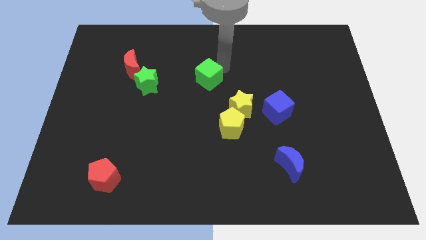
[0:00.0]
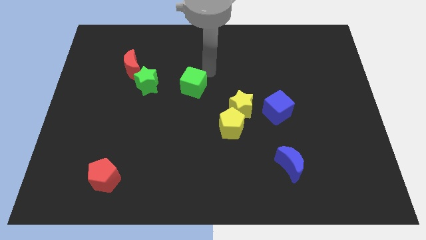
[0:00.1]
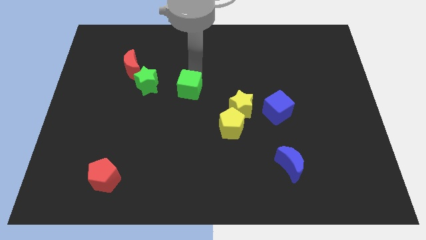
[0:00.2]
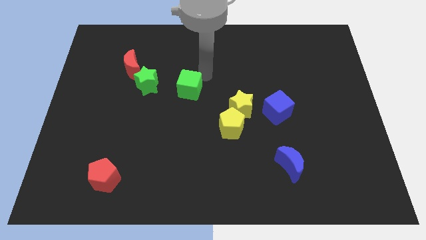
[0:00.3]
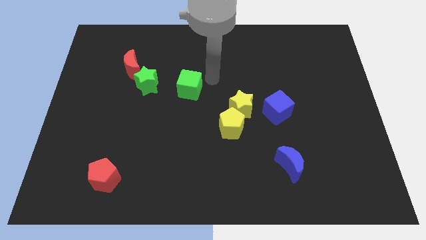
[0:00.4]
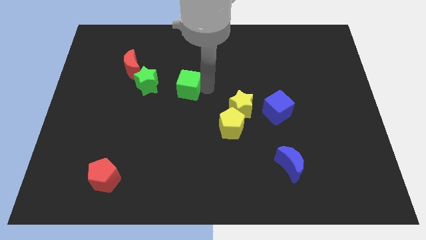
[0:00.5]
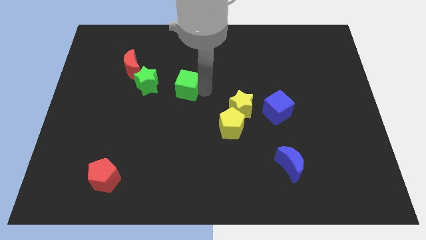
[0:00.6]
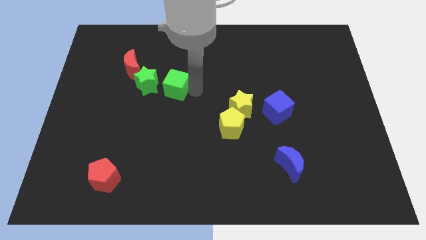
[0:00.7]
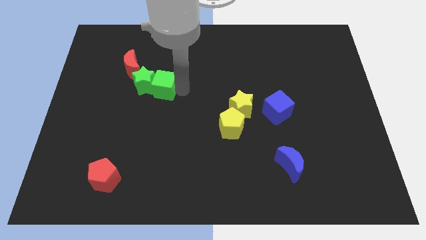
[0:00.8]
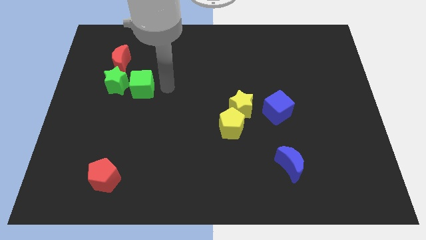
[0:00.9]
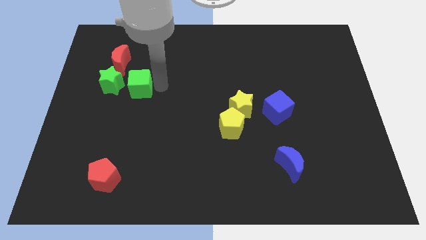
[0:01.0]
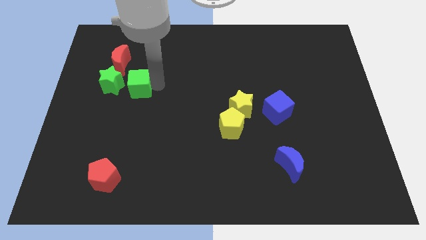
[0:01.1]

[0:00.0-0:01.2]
push the green cube to the right side of the green star on the board

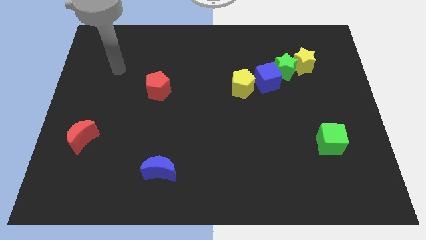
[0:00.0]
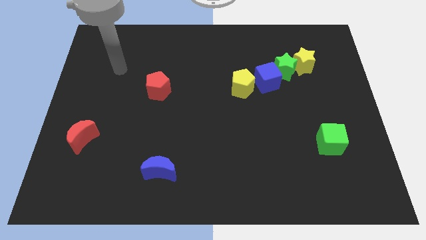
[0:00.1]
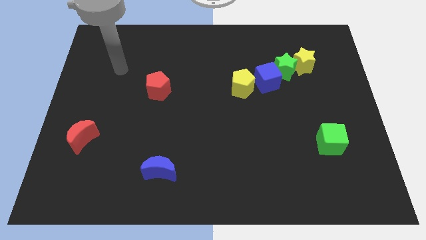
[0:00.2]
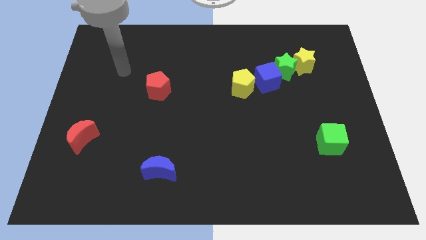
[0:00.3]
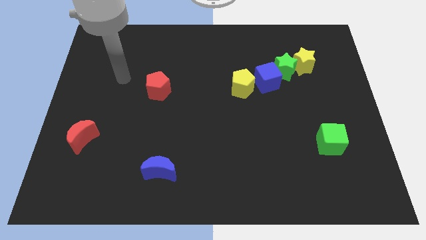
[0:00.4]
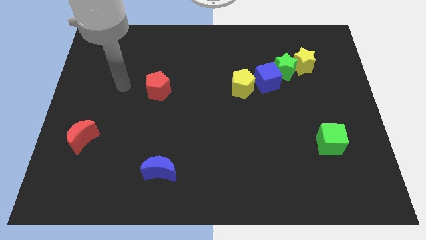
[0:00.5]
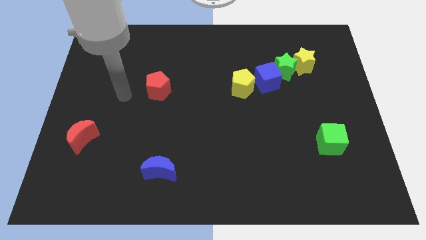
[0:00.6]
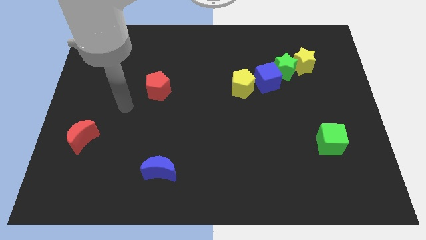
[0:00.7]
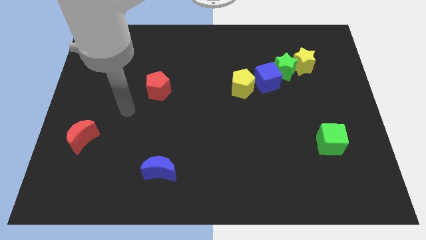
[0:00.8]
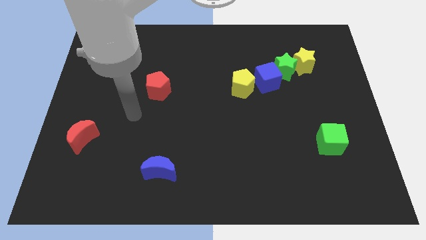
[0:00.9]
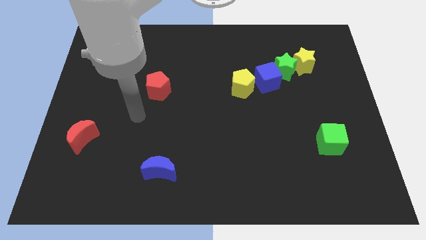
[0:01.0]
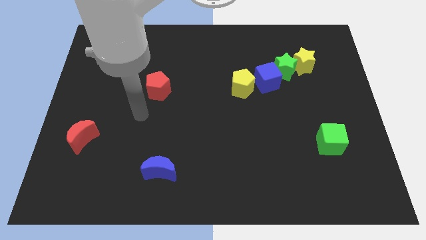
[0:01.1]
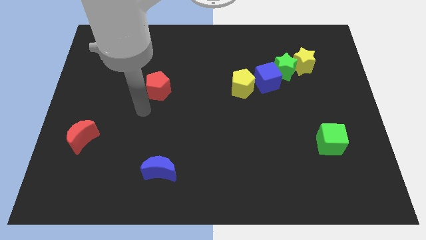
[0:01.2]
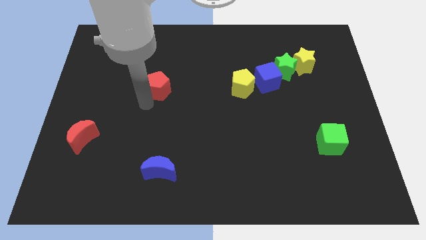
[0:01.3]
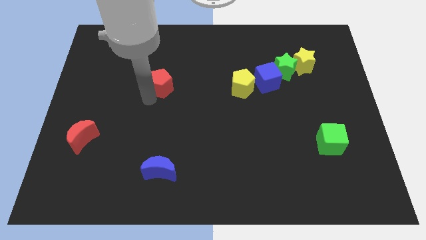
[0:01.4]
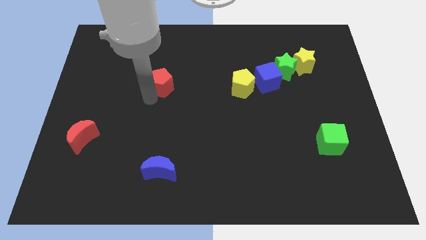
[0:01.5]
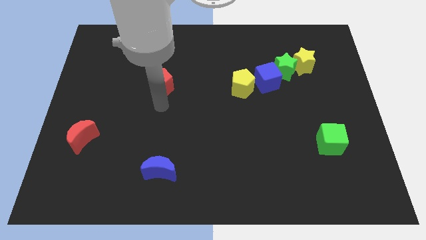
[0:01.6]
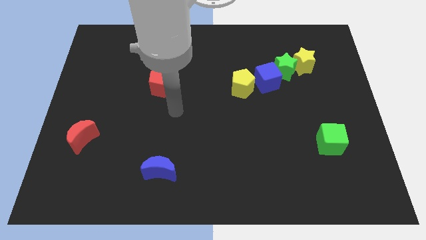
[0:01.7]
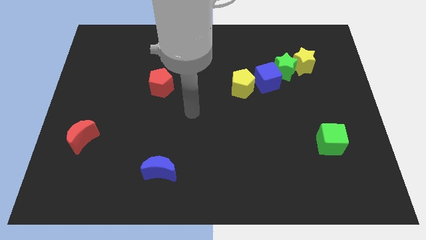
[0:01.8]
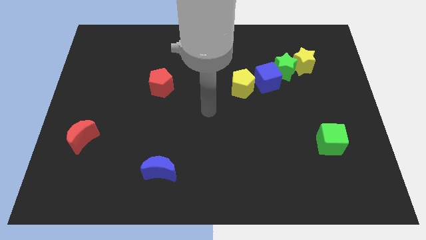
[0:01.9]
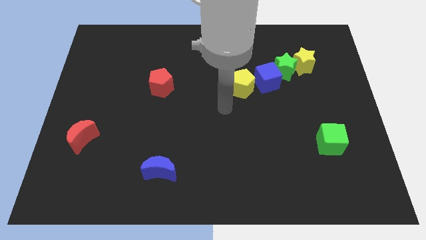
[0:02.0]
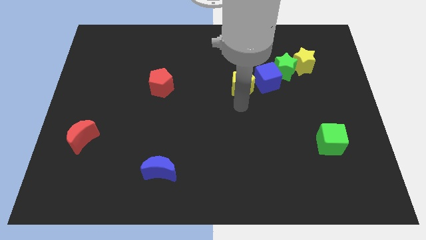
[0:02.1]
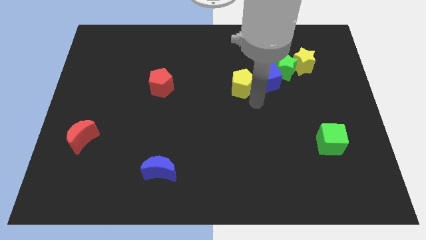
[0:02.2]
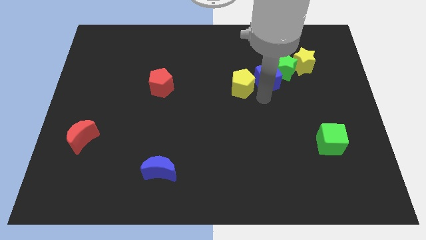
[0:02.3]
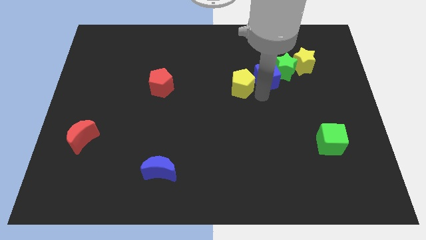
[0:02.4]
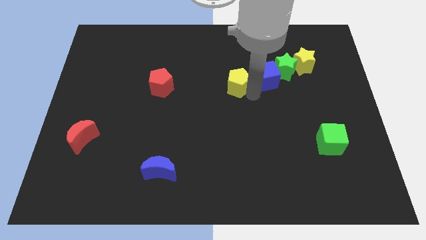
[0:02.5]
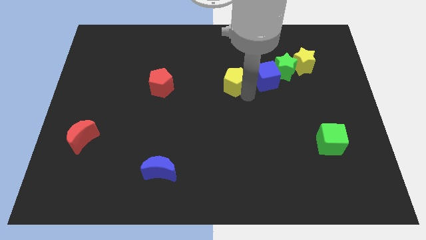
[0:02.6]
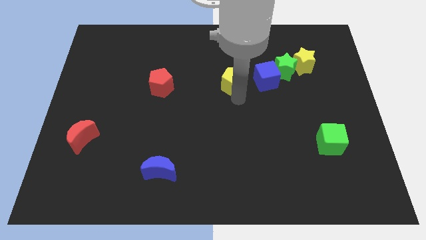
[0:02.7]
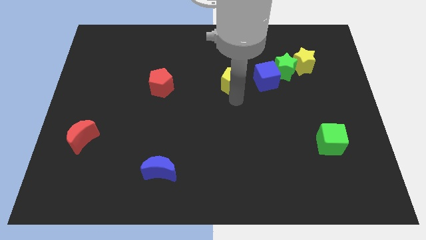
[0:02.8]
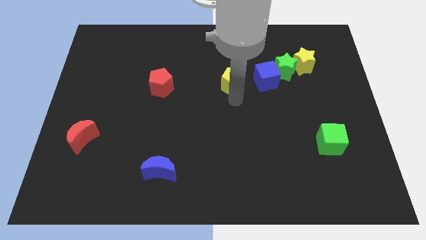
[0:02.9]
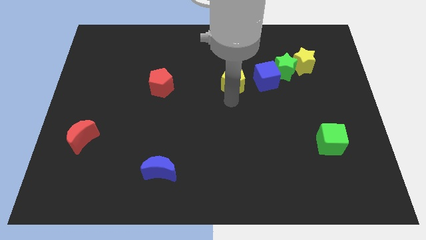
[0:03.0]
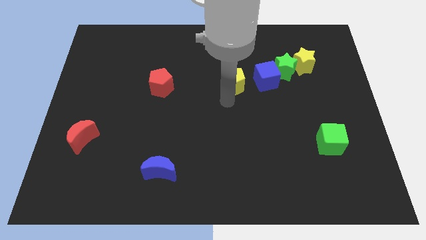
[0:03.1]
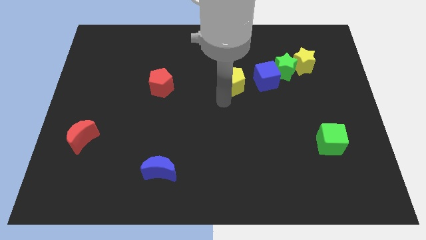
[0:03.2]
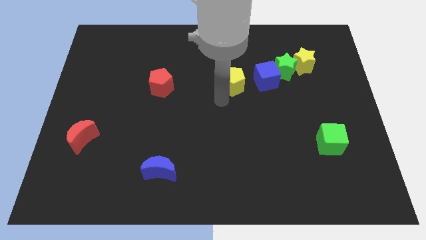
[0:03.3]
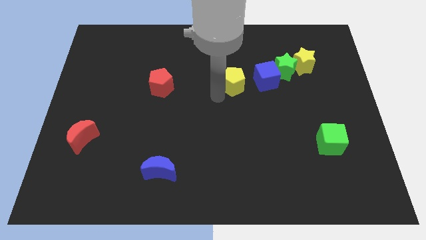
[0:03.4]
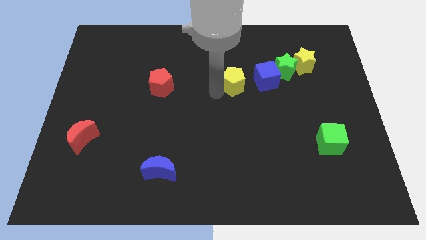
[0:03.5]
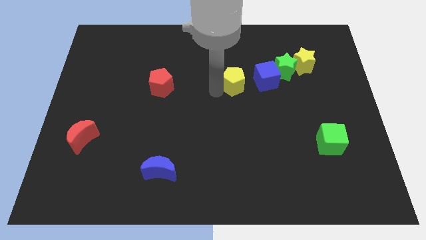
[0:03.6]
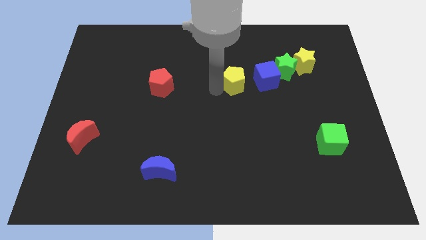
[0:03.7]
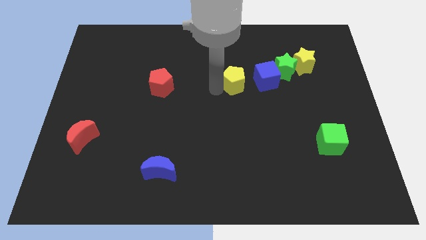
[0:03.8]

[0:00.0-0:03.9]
put the red pentagon and yellow pentagon parallel to each other

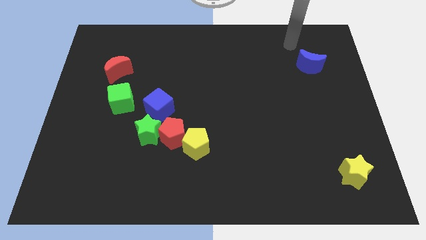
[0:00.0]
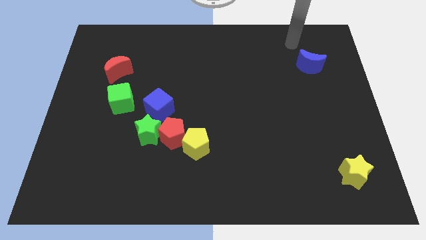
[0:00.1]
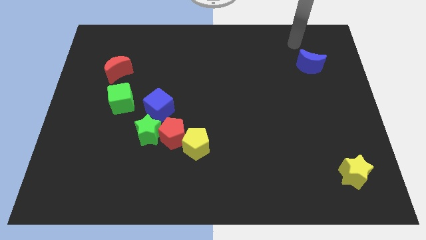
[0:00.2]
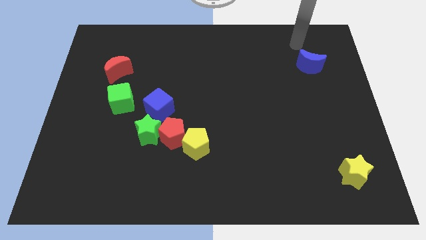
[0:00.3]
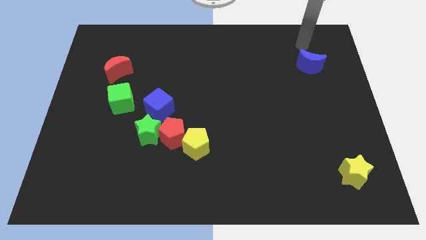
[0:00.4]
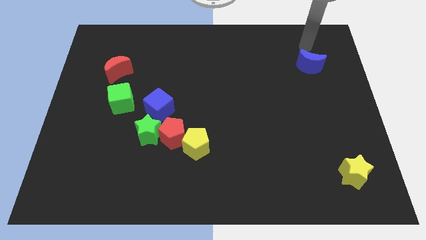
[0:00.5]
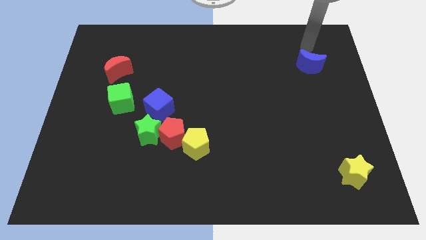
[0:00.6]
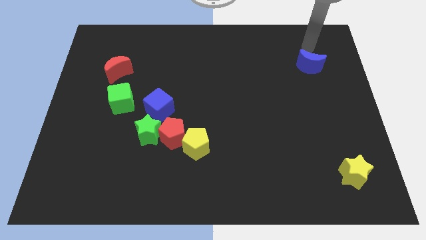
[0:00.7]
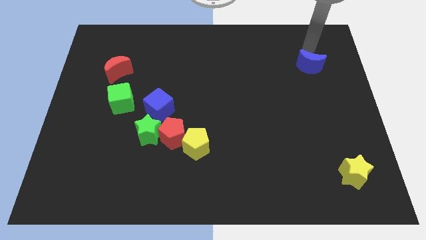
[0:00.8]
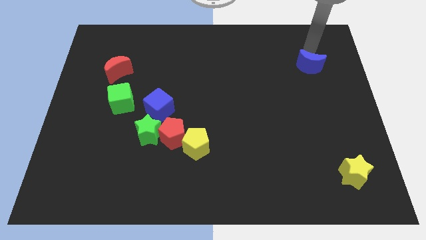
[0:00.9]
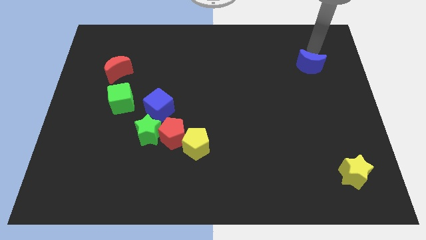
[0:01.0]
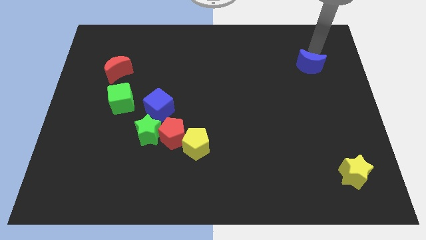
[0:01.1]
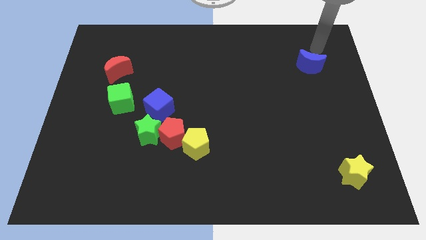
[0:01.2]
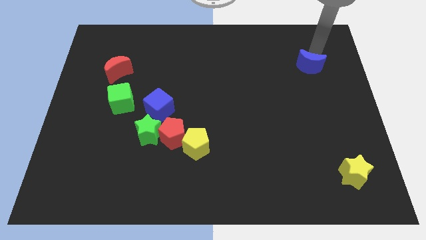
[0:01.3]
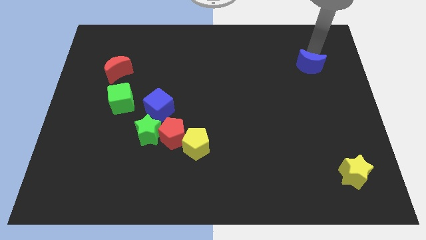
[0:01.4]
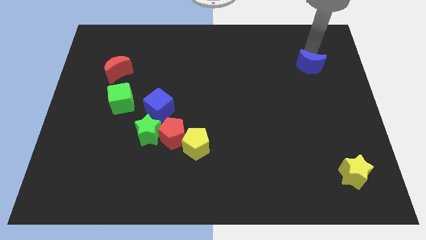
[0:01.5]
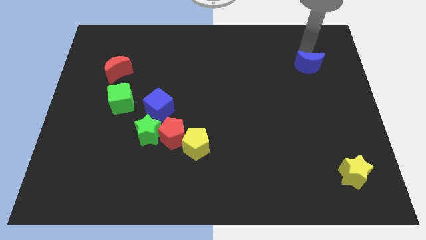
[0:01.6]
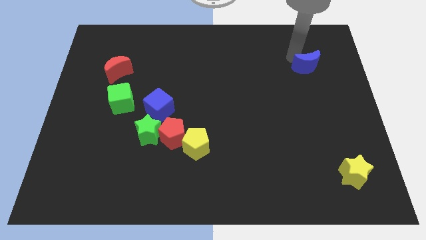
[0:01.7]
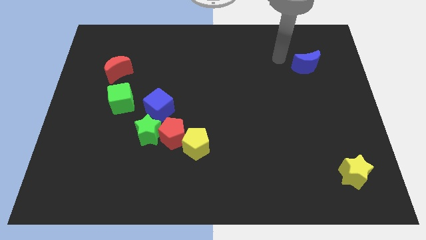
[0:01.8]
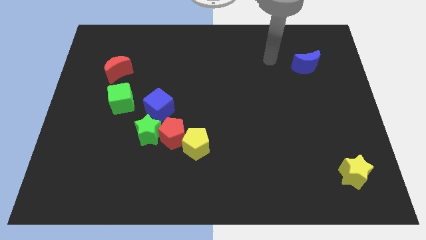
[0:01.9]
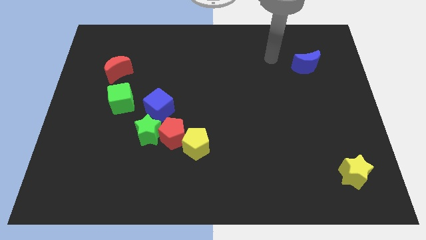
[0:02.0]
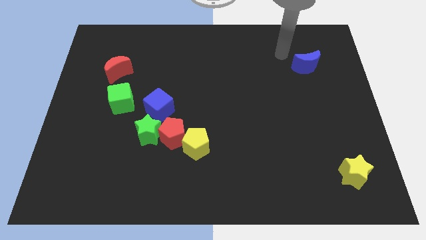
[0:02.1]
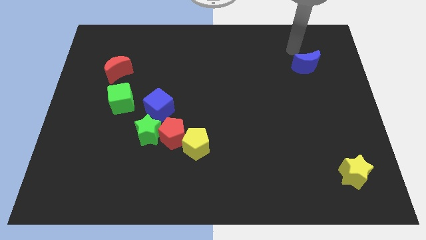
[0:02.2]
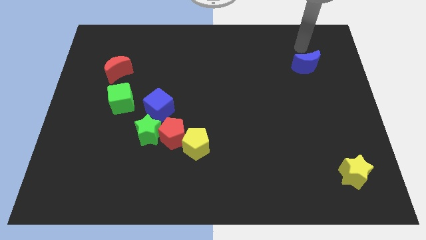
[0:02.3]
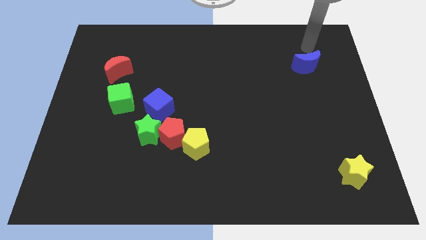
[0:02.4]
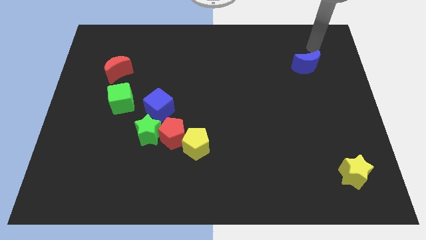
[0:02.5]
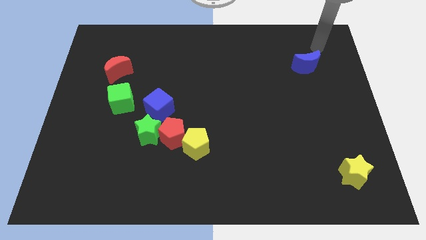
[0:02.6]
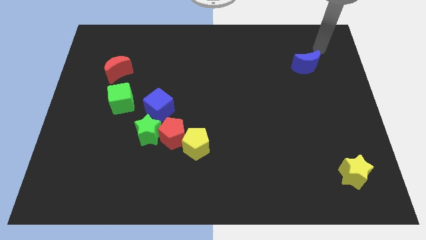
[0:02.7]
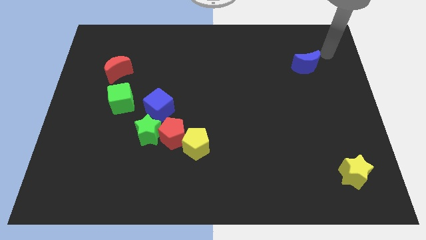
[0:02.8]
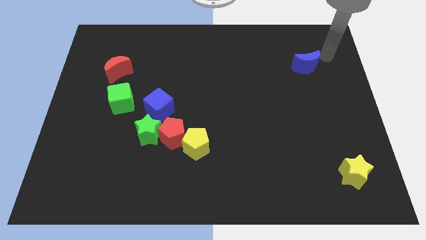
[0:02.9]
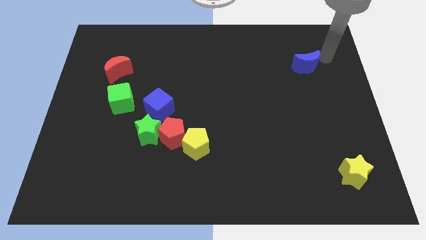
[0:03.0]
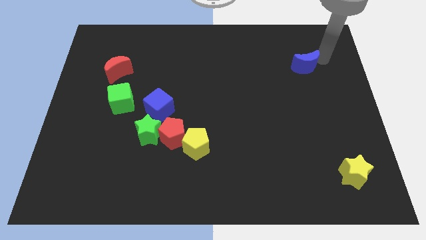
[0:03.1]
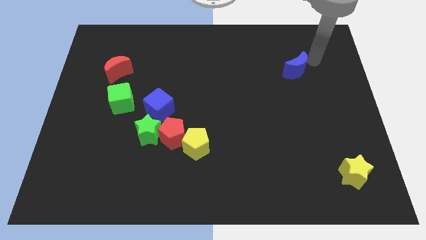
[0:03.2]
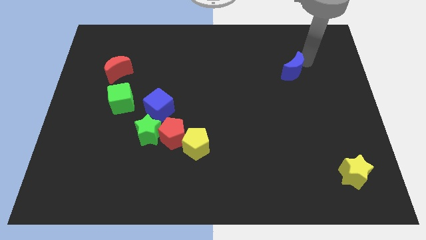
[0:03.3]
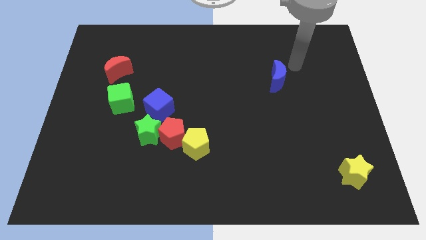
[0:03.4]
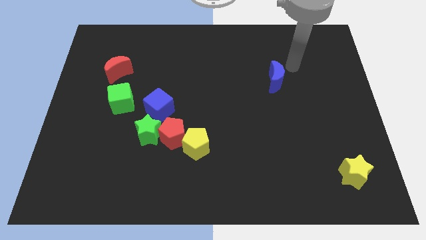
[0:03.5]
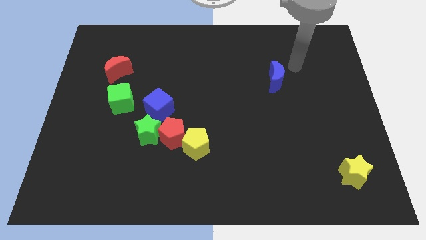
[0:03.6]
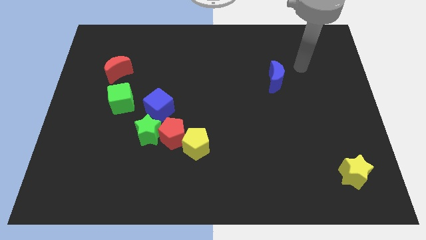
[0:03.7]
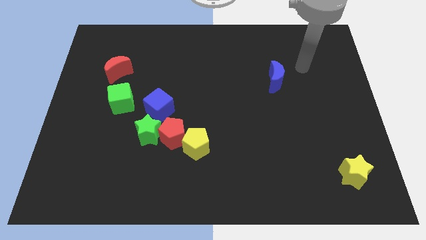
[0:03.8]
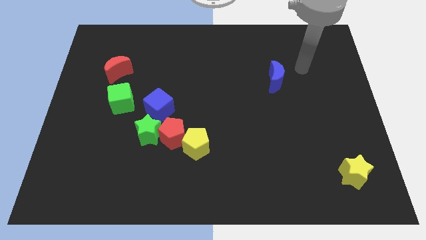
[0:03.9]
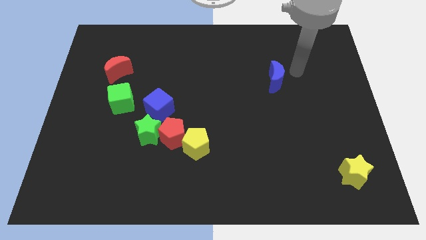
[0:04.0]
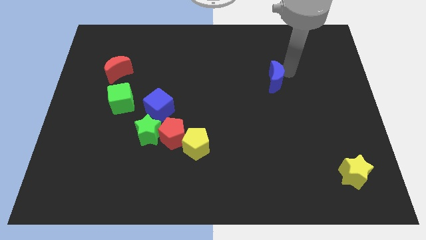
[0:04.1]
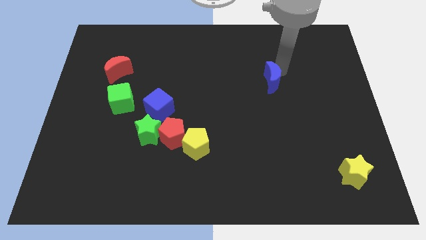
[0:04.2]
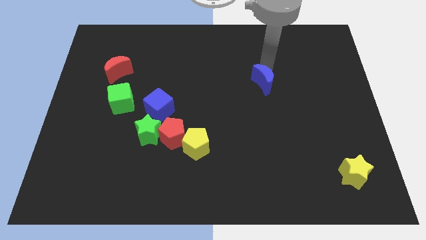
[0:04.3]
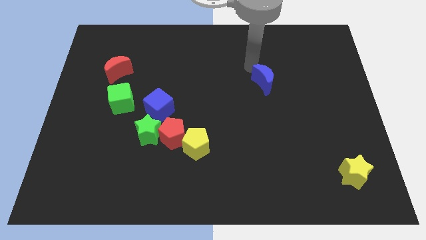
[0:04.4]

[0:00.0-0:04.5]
drag the blue moon near the blue cube
